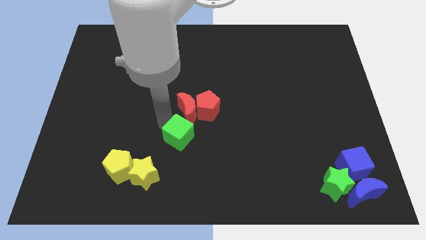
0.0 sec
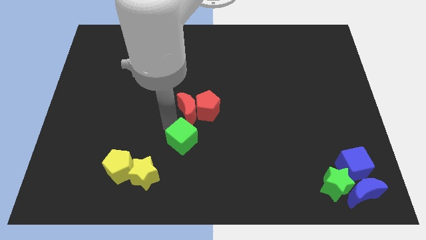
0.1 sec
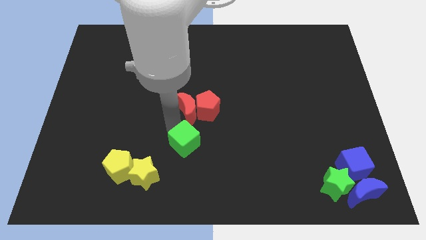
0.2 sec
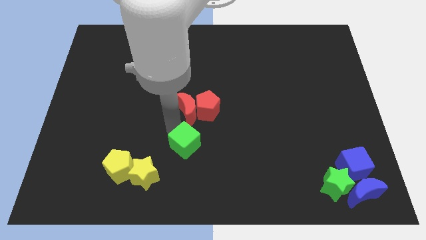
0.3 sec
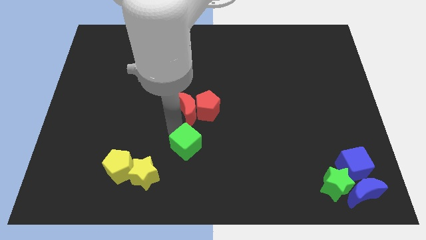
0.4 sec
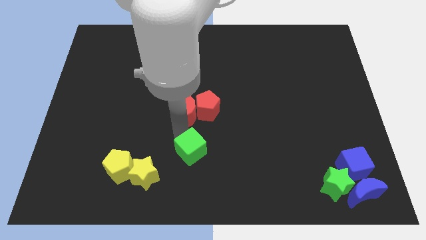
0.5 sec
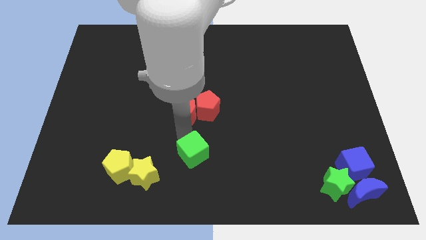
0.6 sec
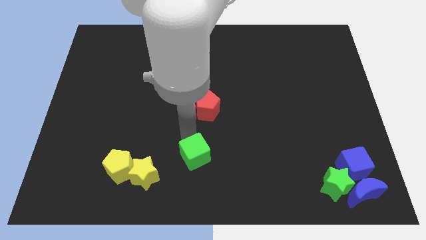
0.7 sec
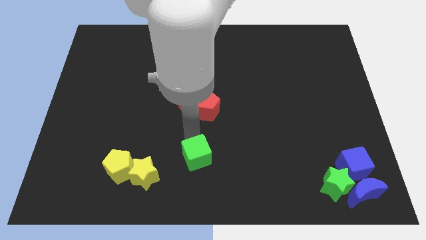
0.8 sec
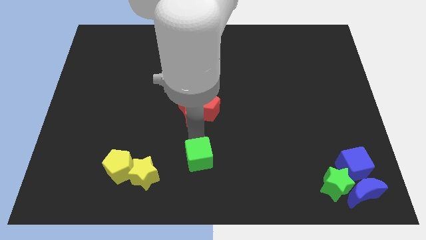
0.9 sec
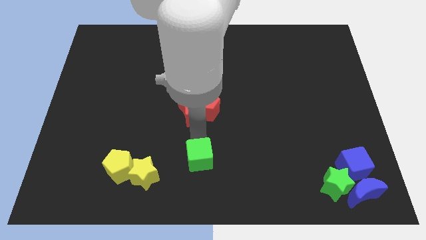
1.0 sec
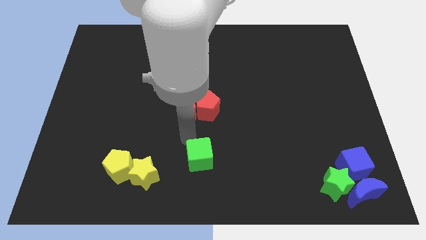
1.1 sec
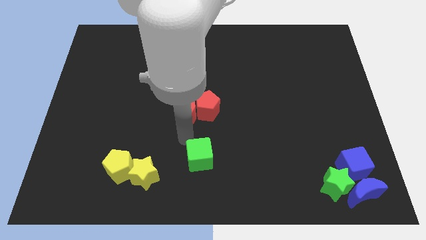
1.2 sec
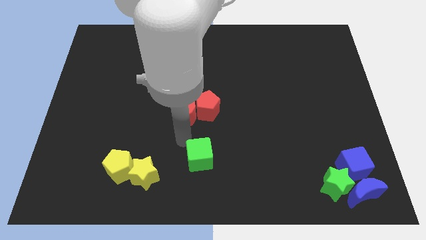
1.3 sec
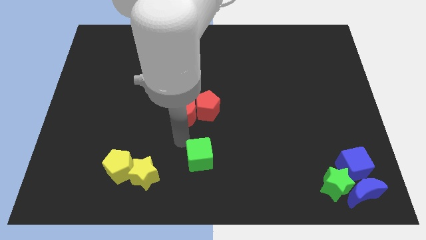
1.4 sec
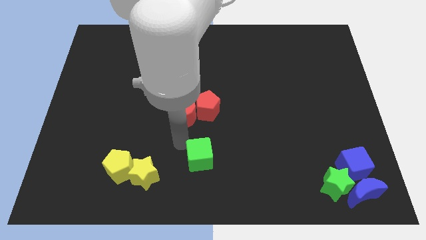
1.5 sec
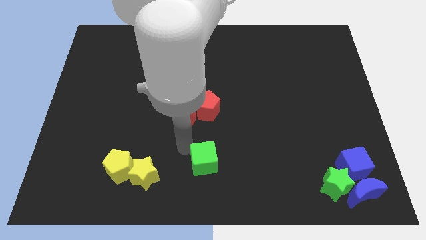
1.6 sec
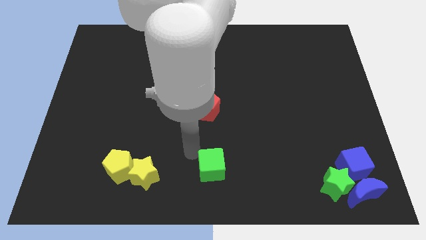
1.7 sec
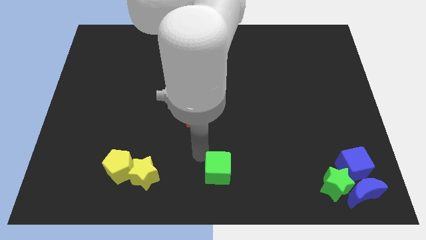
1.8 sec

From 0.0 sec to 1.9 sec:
push the green cube to the right side of the board

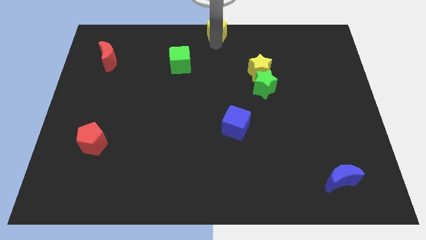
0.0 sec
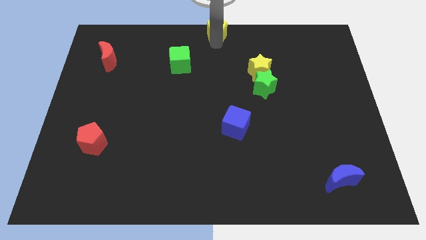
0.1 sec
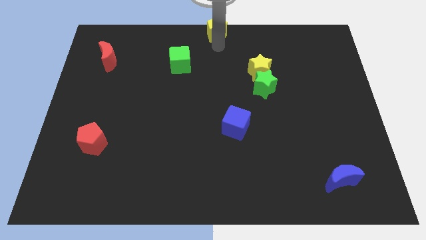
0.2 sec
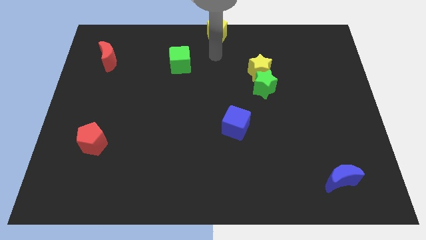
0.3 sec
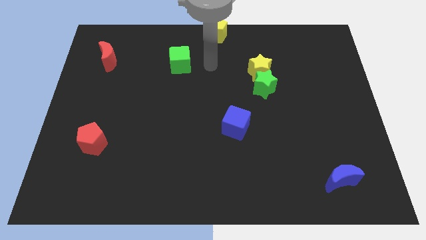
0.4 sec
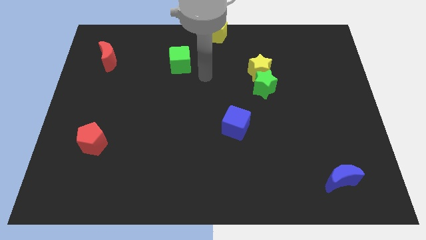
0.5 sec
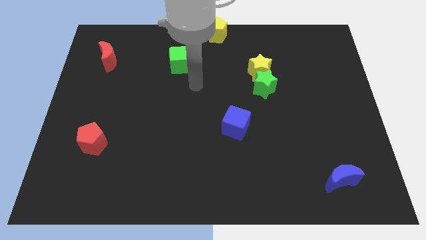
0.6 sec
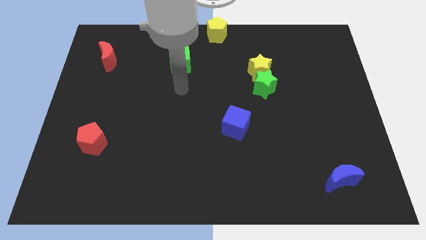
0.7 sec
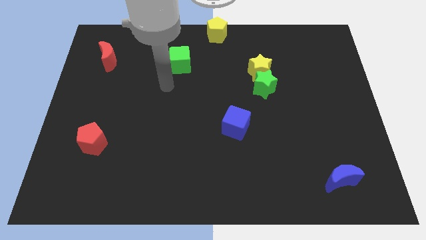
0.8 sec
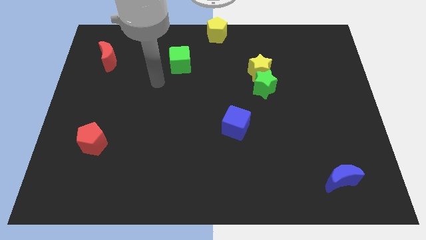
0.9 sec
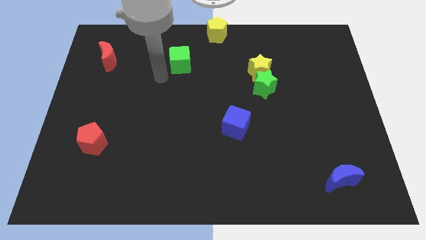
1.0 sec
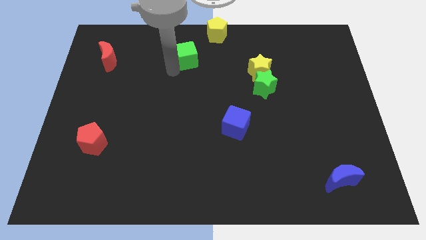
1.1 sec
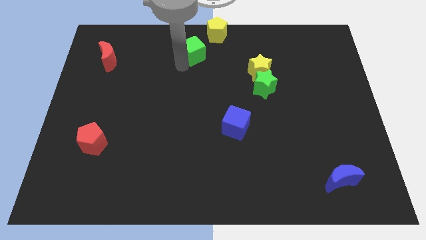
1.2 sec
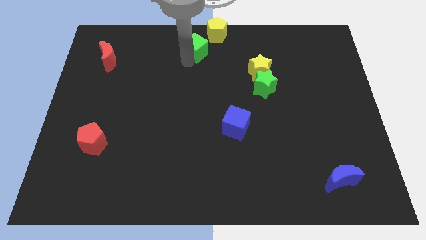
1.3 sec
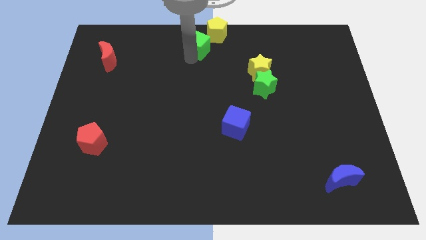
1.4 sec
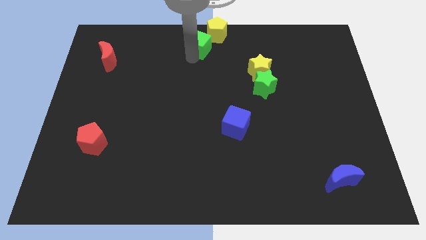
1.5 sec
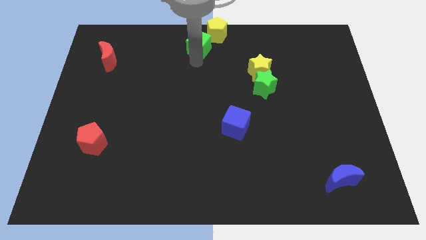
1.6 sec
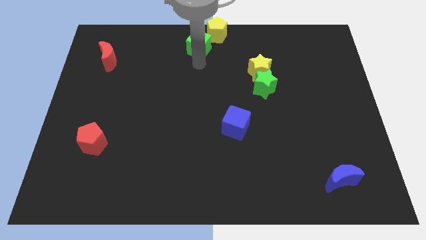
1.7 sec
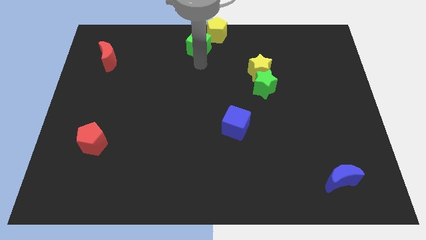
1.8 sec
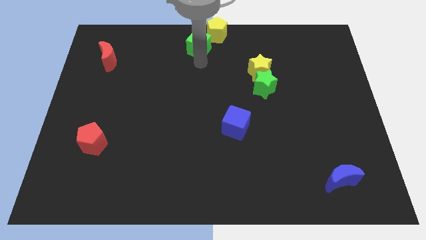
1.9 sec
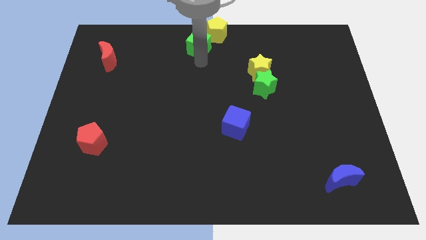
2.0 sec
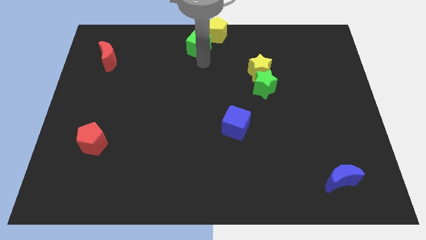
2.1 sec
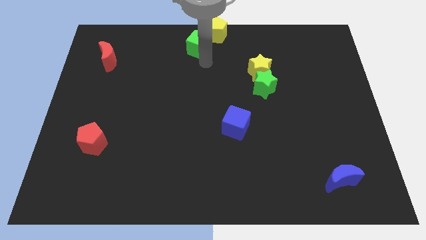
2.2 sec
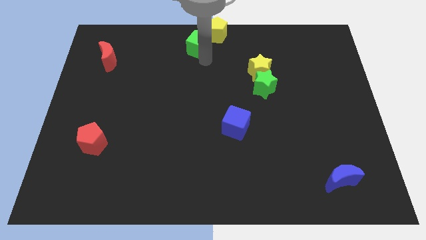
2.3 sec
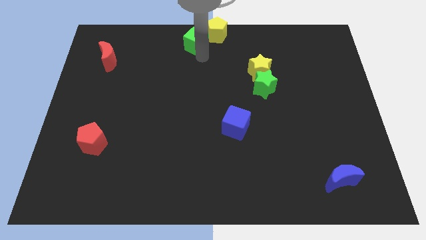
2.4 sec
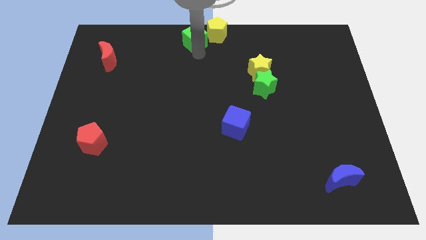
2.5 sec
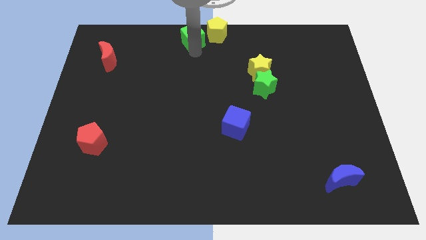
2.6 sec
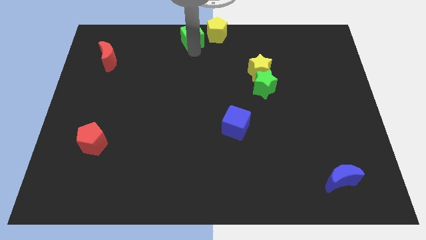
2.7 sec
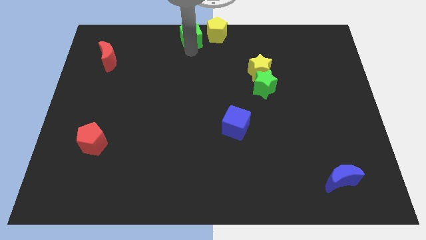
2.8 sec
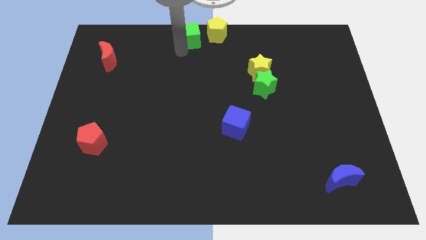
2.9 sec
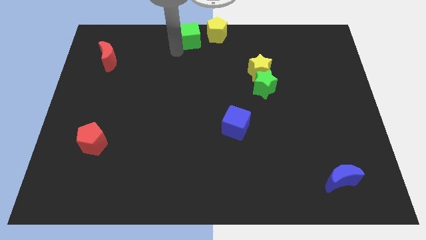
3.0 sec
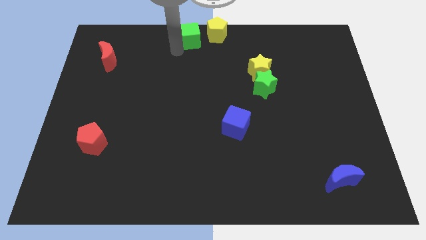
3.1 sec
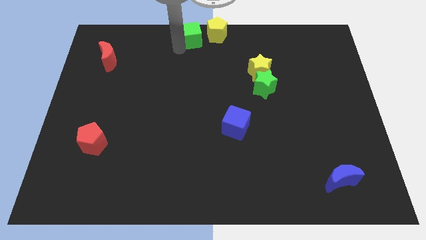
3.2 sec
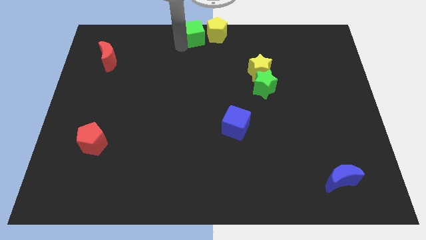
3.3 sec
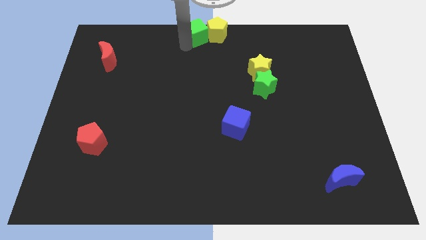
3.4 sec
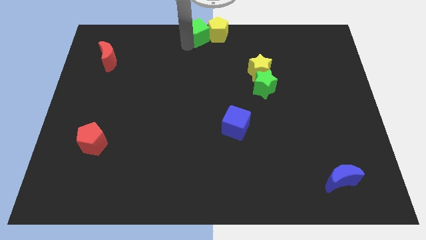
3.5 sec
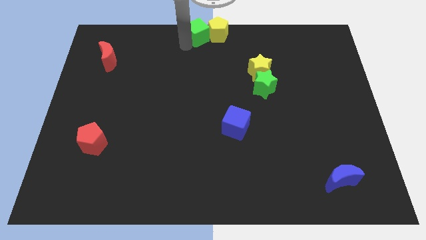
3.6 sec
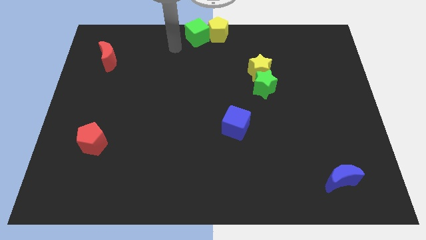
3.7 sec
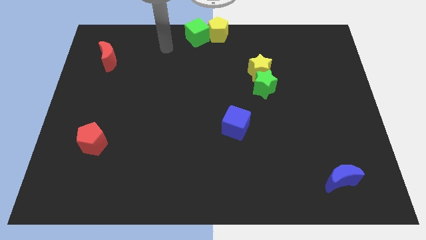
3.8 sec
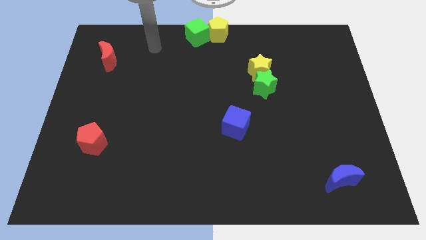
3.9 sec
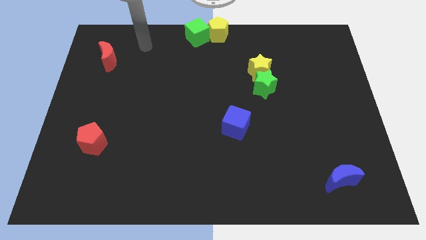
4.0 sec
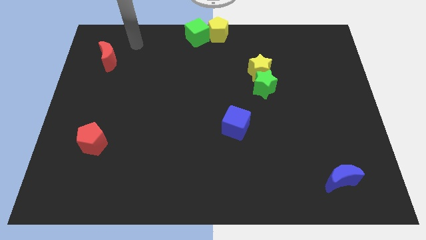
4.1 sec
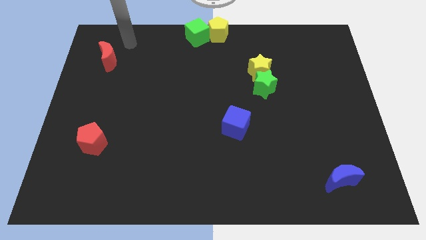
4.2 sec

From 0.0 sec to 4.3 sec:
push the green cube into the yellow pentagon

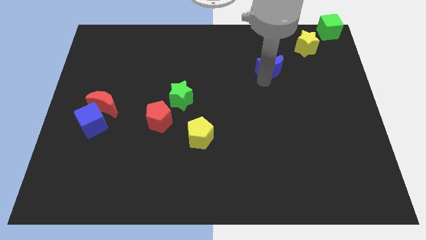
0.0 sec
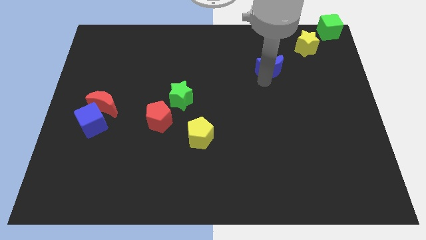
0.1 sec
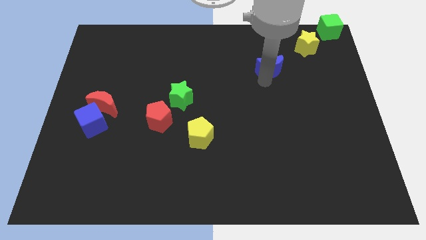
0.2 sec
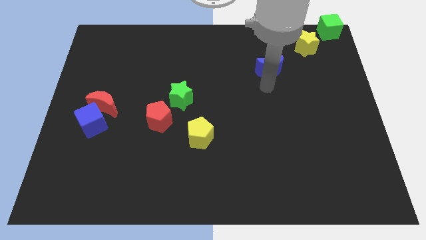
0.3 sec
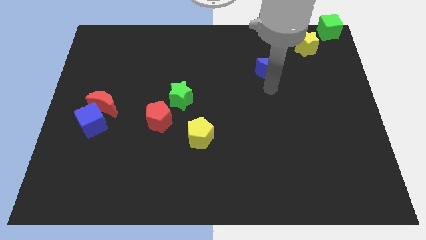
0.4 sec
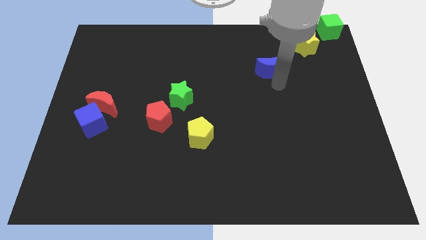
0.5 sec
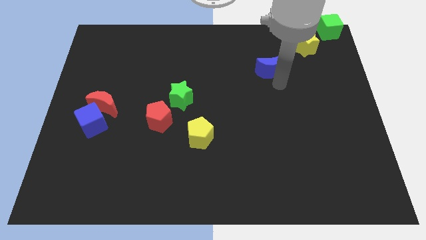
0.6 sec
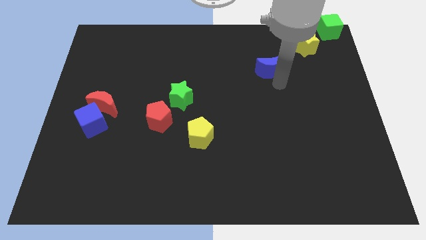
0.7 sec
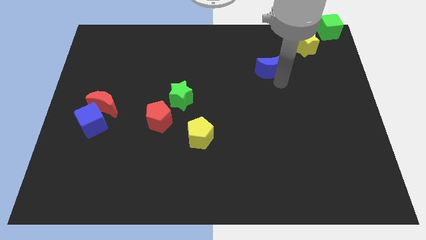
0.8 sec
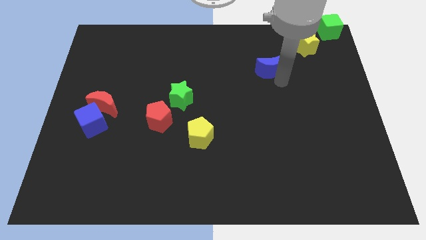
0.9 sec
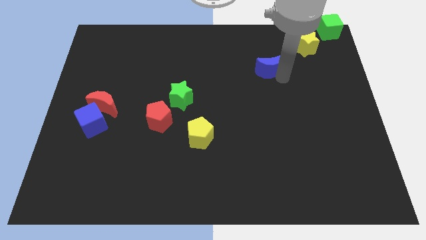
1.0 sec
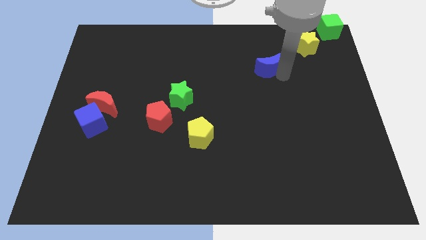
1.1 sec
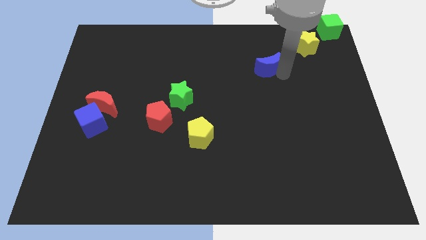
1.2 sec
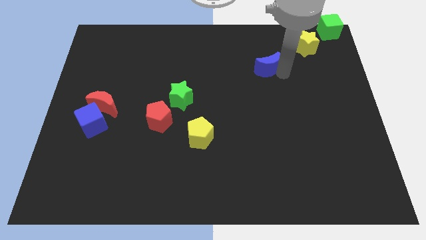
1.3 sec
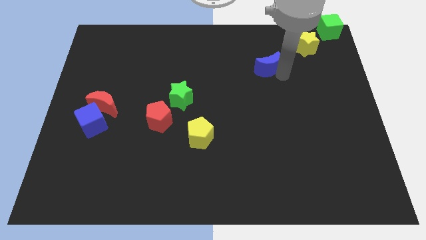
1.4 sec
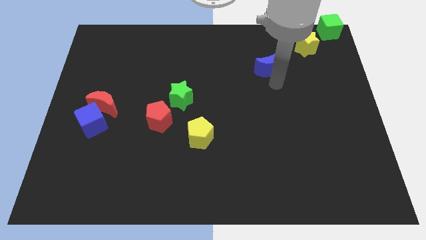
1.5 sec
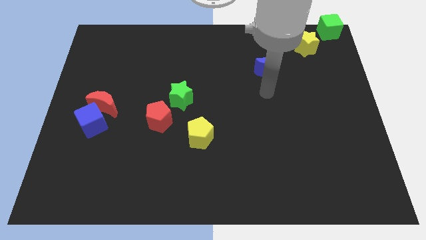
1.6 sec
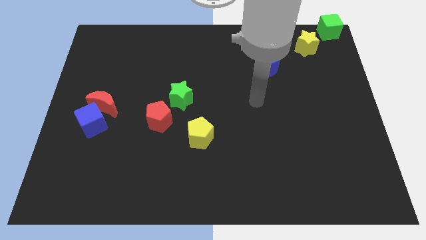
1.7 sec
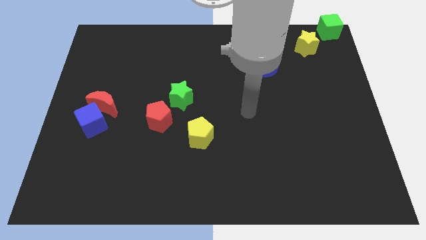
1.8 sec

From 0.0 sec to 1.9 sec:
move your arm away from the blue crescent

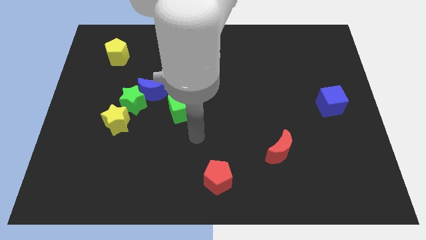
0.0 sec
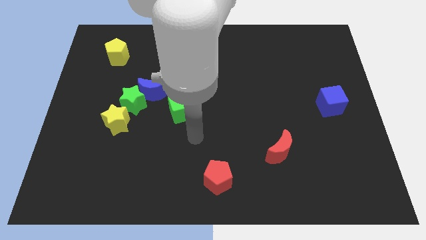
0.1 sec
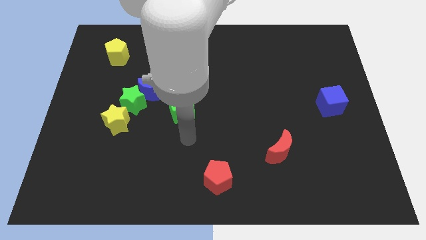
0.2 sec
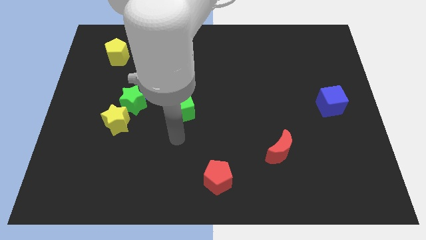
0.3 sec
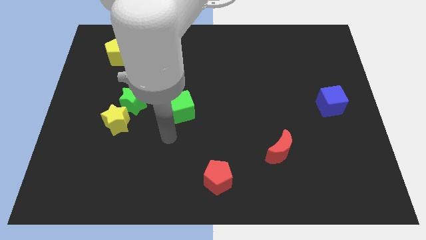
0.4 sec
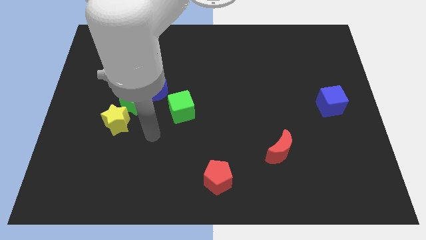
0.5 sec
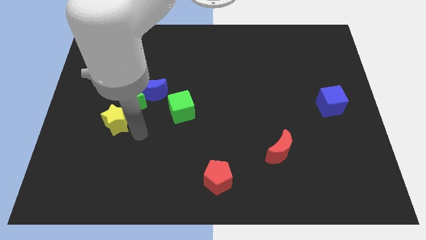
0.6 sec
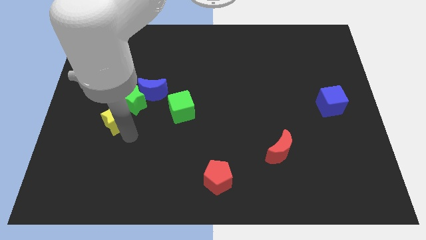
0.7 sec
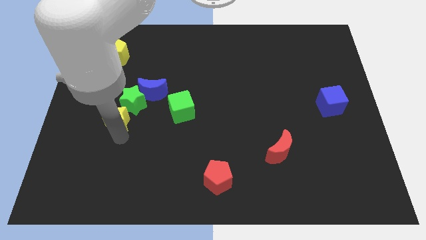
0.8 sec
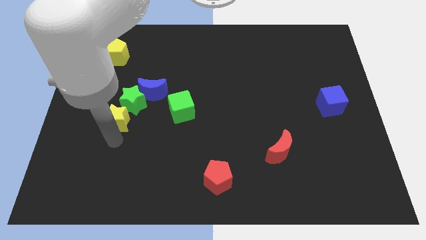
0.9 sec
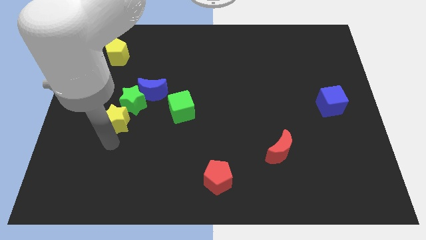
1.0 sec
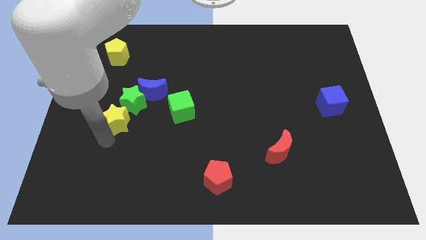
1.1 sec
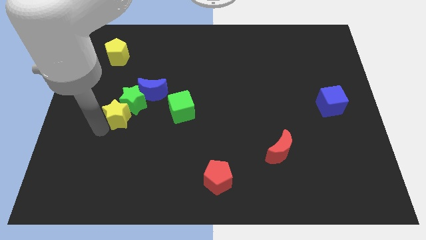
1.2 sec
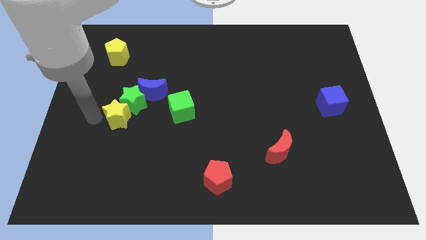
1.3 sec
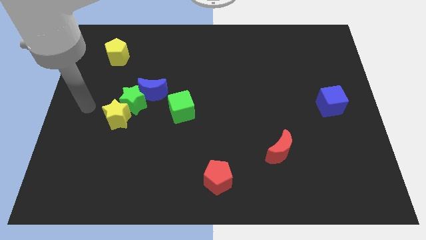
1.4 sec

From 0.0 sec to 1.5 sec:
slightly push the yellow star into green star
